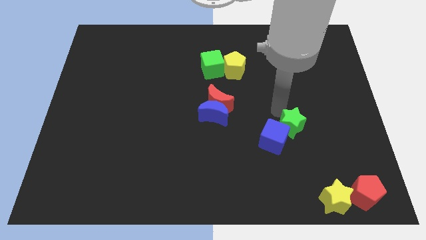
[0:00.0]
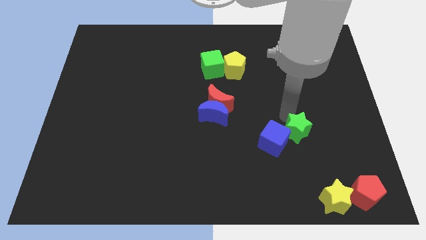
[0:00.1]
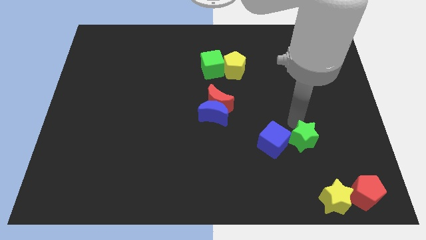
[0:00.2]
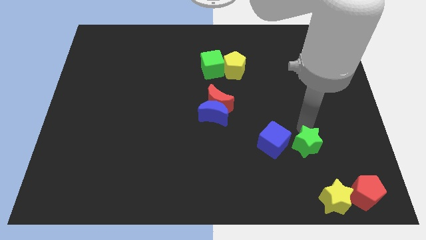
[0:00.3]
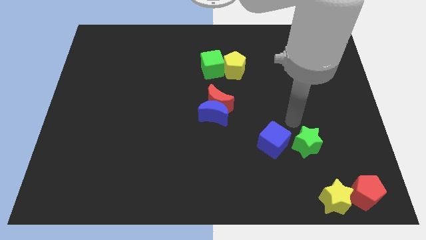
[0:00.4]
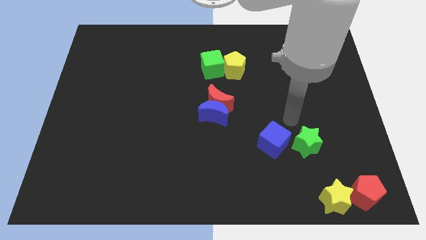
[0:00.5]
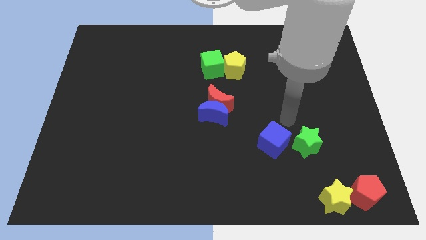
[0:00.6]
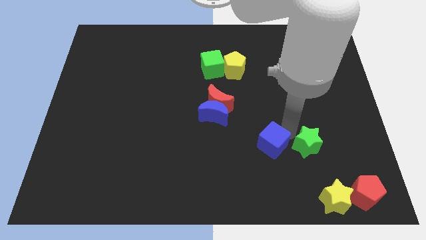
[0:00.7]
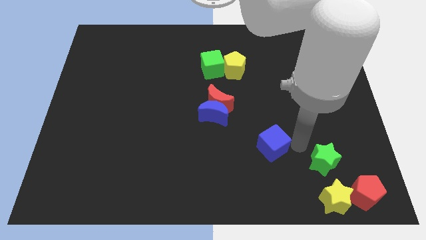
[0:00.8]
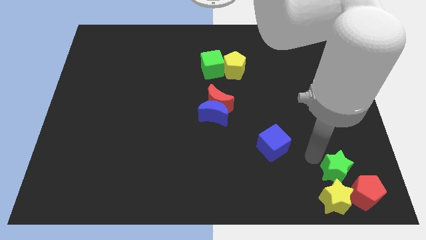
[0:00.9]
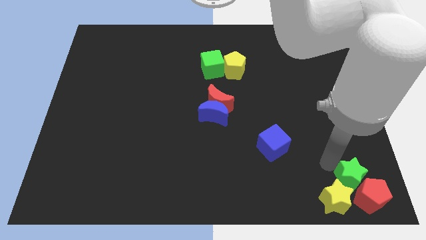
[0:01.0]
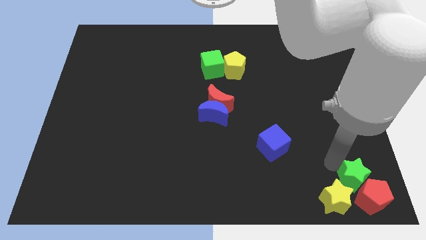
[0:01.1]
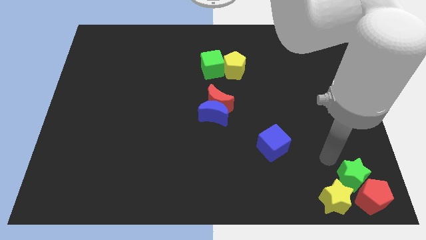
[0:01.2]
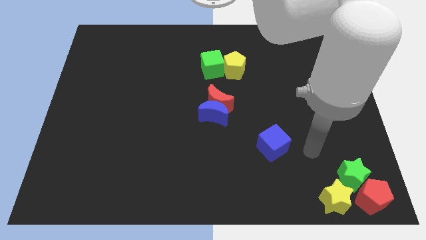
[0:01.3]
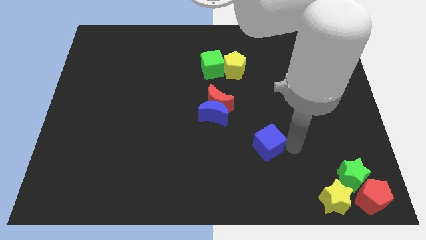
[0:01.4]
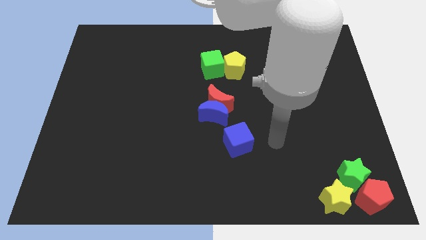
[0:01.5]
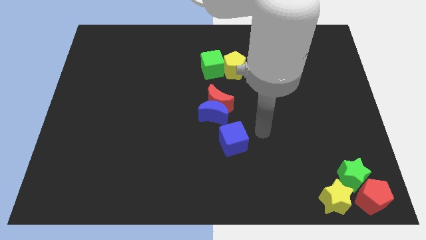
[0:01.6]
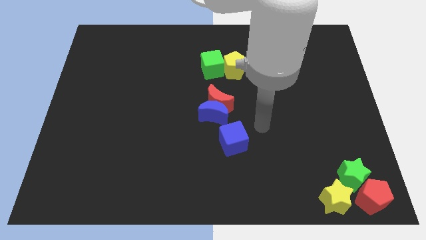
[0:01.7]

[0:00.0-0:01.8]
push the green star away from the blue cube

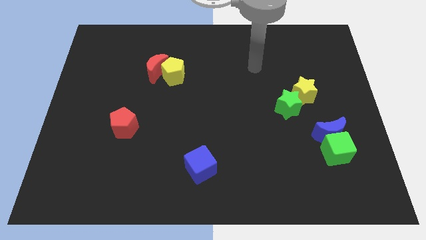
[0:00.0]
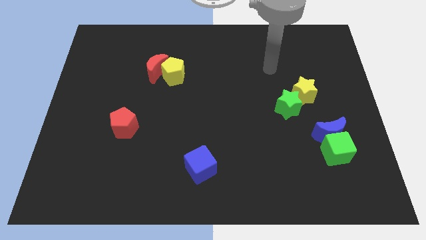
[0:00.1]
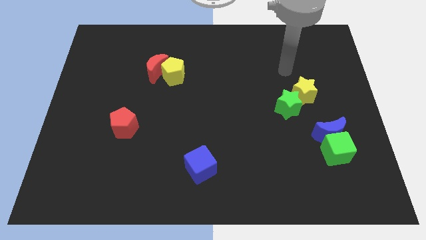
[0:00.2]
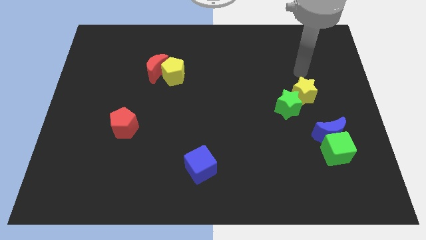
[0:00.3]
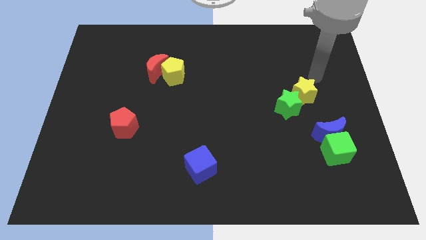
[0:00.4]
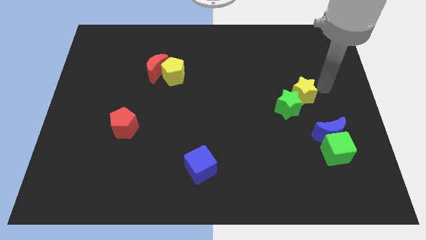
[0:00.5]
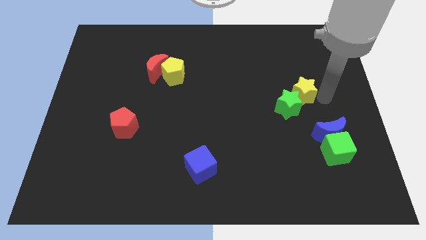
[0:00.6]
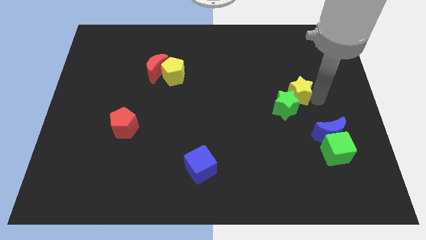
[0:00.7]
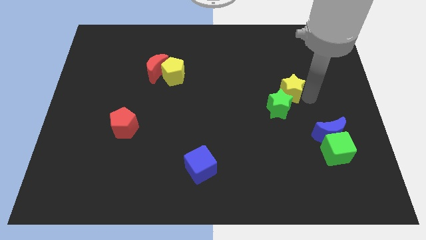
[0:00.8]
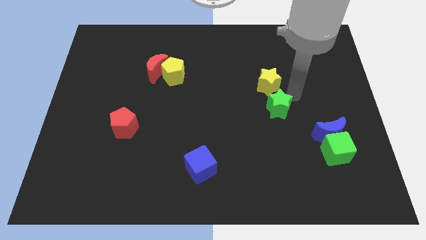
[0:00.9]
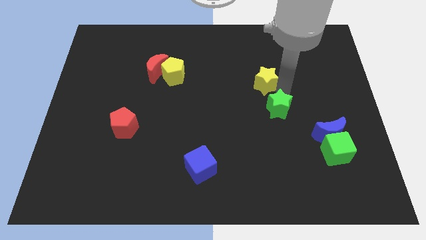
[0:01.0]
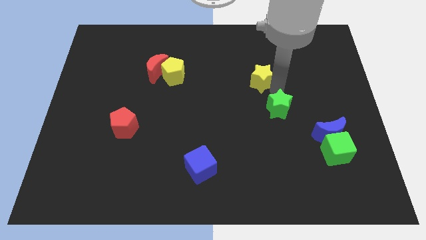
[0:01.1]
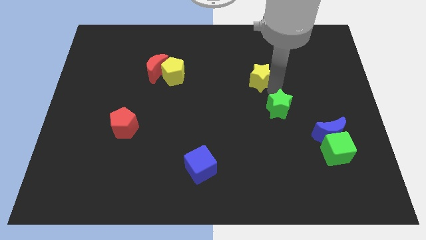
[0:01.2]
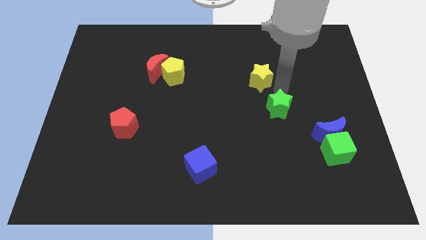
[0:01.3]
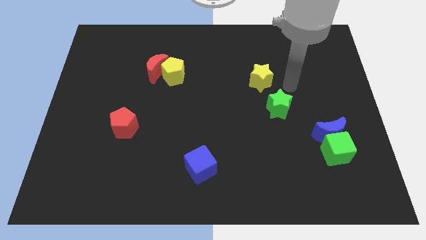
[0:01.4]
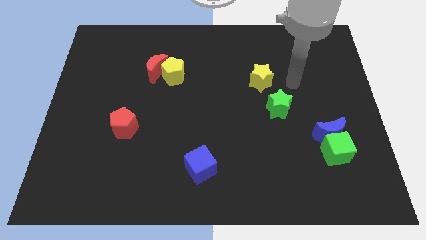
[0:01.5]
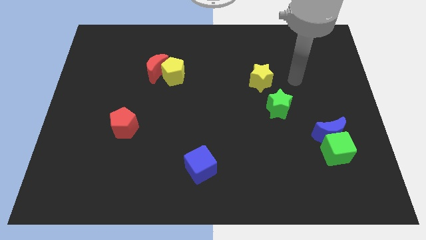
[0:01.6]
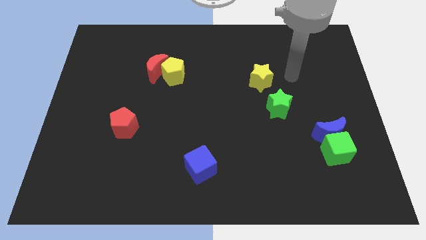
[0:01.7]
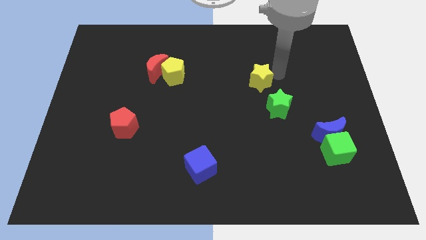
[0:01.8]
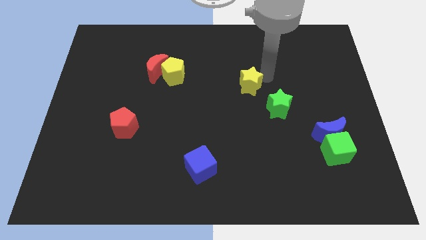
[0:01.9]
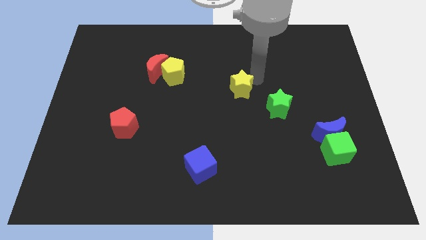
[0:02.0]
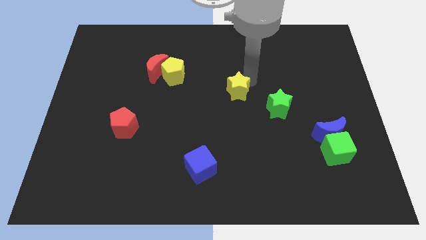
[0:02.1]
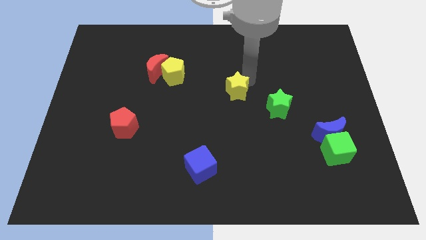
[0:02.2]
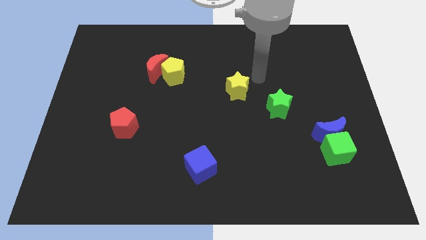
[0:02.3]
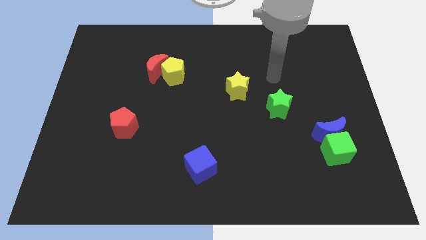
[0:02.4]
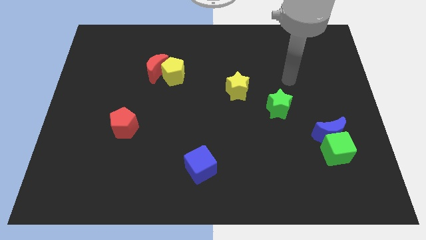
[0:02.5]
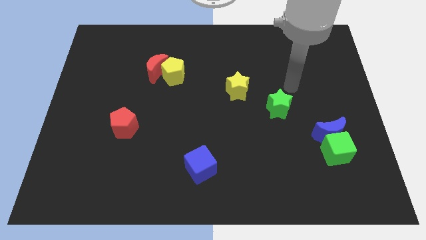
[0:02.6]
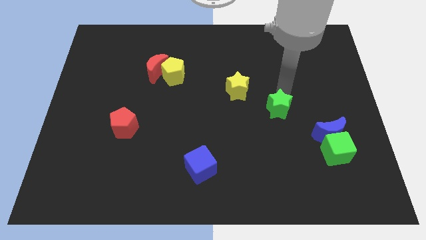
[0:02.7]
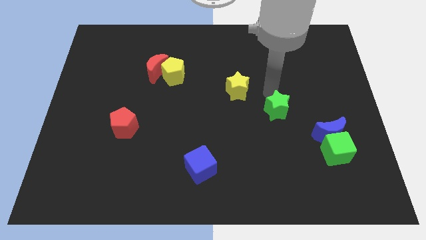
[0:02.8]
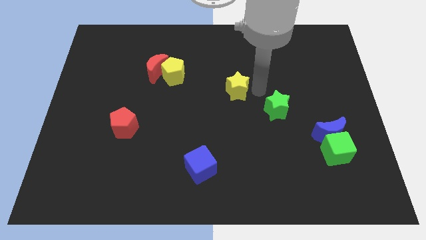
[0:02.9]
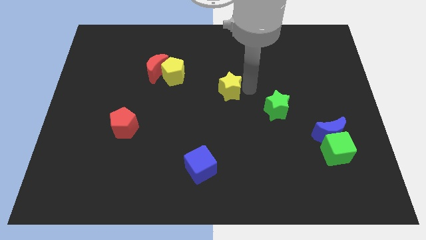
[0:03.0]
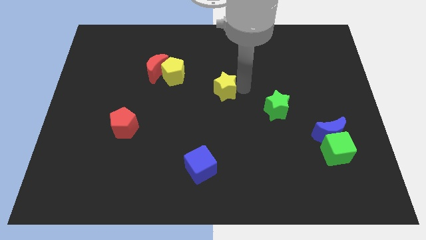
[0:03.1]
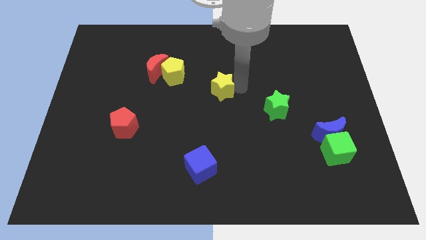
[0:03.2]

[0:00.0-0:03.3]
move the yellow star to the center of the board

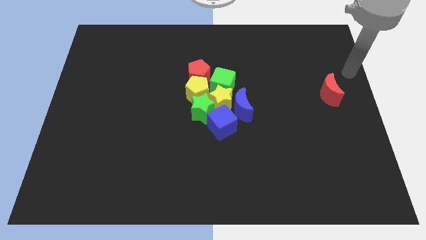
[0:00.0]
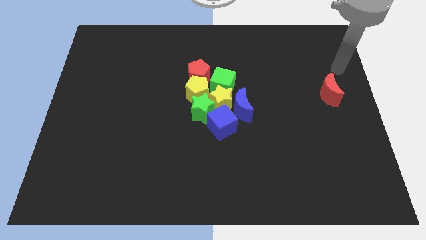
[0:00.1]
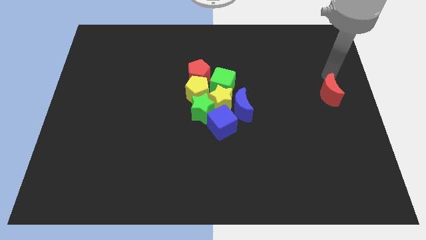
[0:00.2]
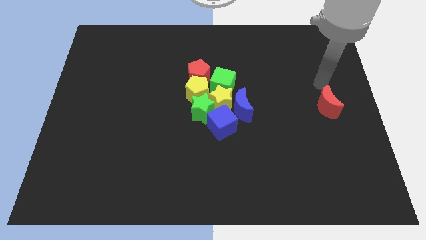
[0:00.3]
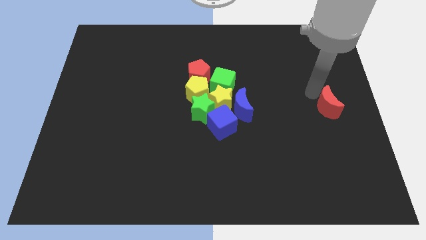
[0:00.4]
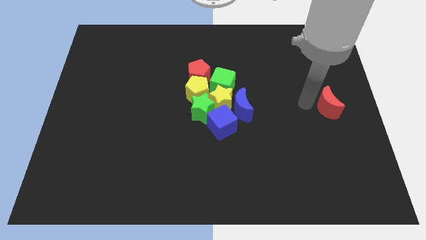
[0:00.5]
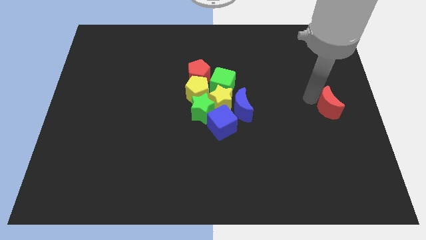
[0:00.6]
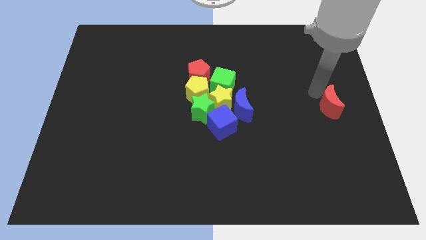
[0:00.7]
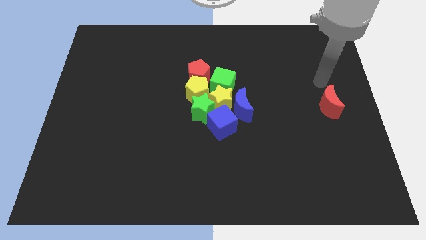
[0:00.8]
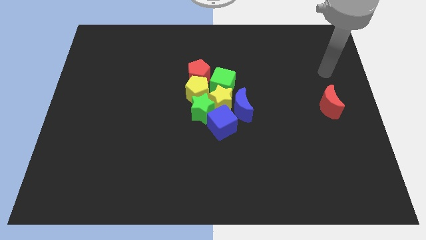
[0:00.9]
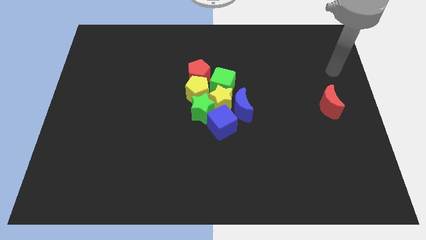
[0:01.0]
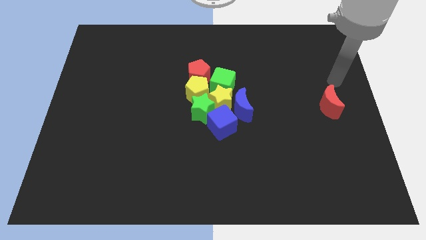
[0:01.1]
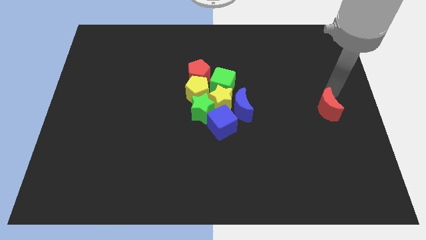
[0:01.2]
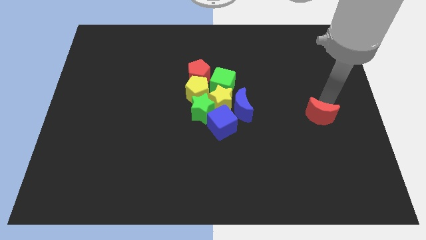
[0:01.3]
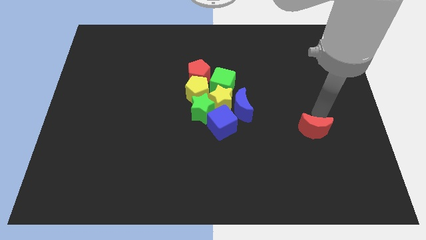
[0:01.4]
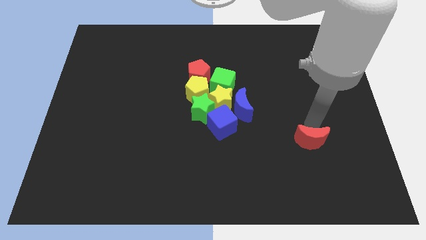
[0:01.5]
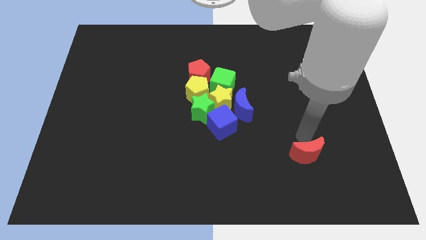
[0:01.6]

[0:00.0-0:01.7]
slightly push the red moon towards the bottom of the board

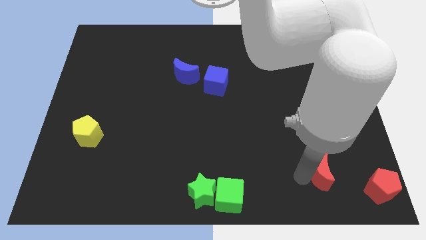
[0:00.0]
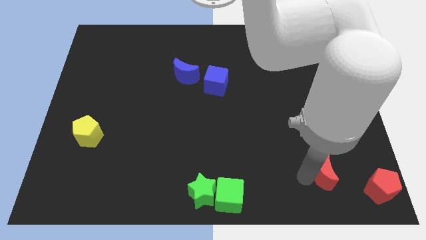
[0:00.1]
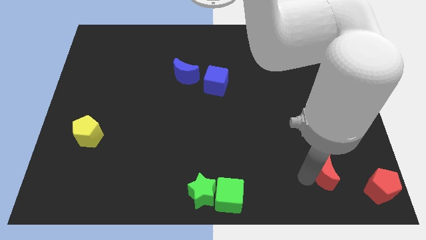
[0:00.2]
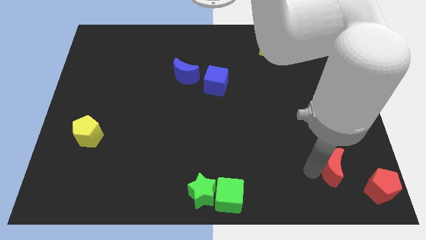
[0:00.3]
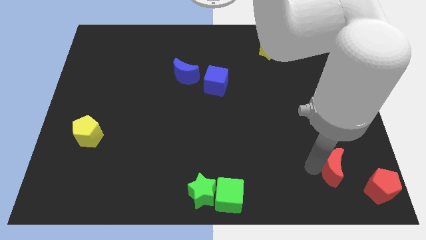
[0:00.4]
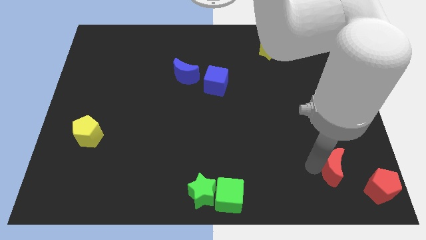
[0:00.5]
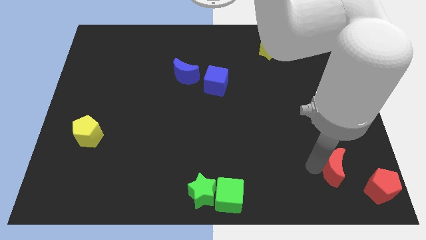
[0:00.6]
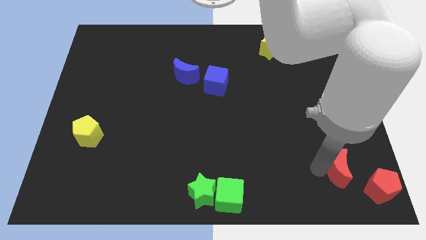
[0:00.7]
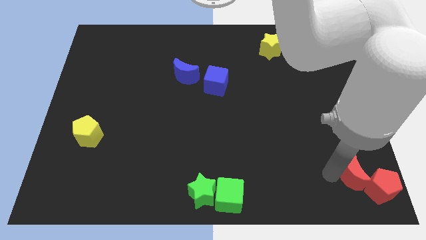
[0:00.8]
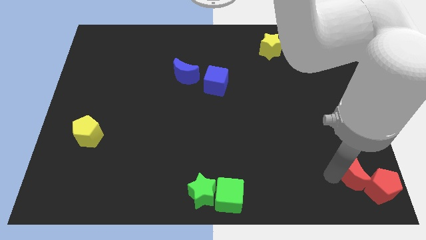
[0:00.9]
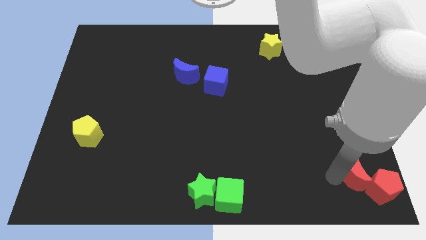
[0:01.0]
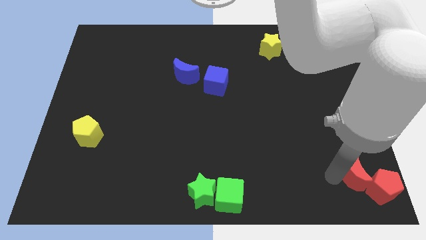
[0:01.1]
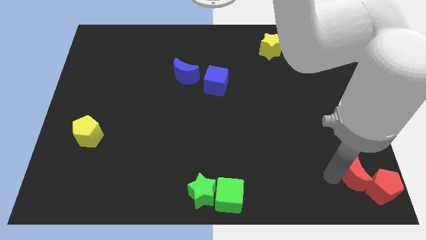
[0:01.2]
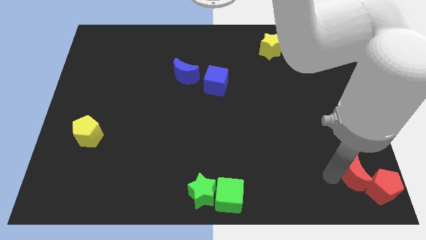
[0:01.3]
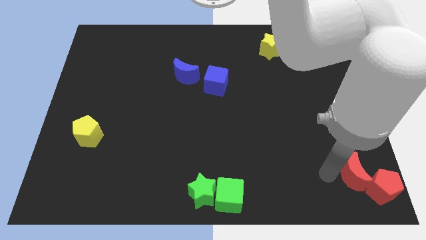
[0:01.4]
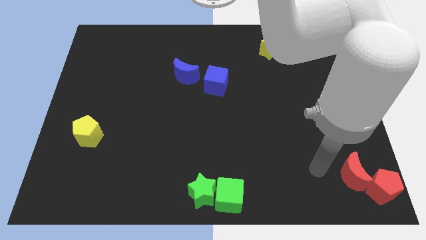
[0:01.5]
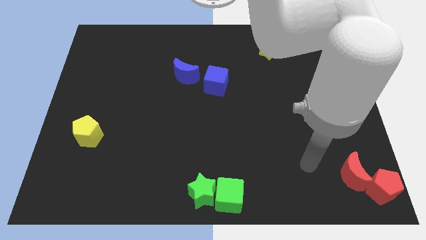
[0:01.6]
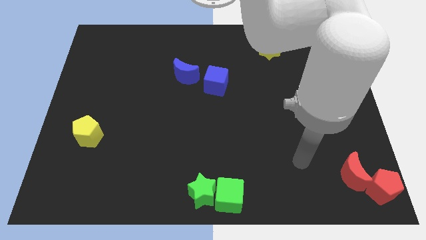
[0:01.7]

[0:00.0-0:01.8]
move the red crescent to the left of the red pentagon

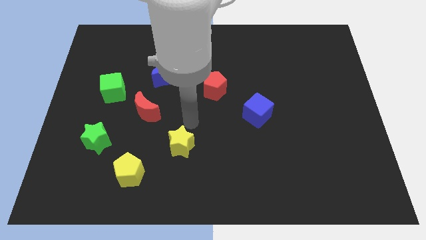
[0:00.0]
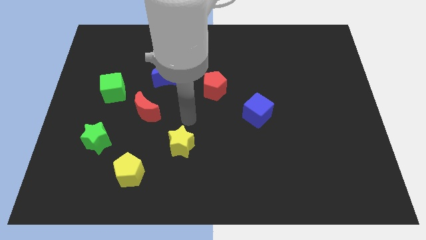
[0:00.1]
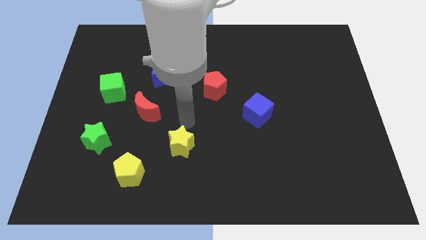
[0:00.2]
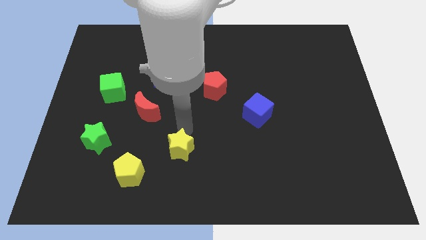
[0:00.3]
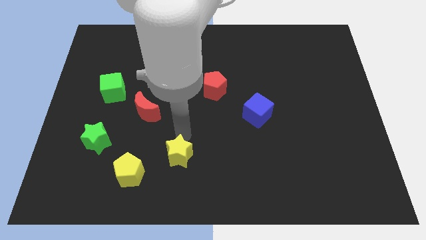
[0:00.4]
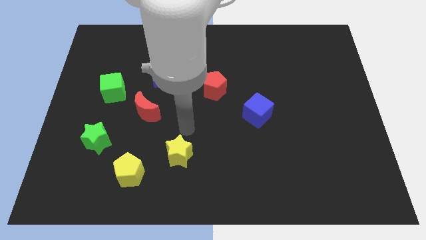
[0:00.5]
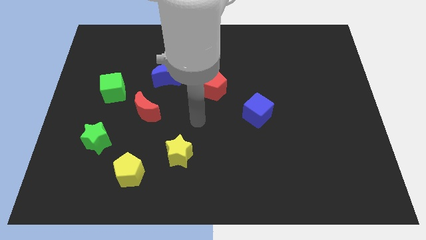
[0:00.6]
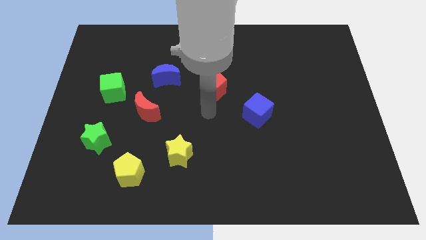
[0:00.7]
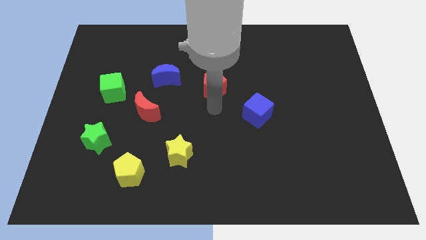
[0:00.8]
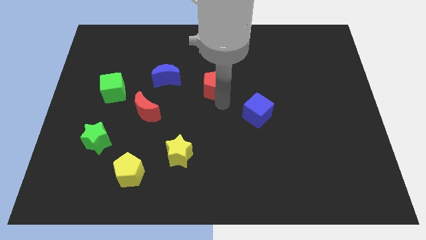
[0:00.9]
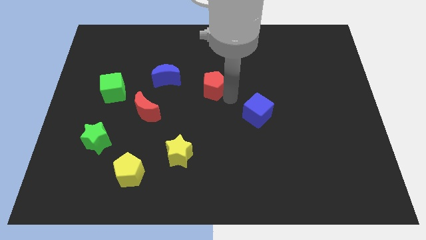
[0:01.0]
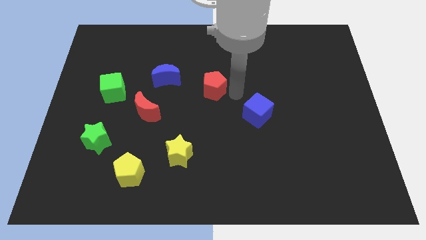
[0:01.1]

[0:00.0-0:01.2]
move your arm at the bottom right side of the red pentagon
